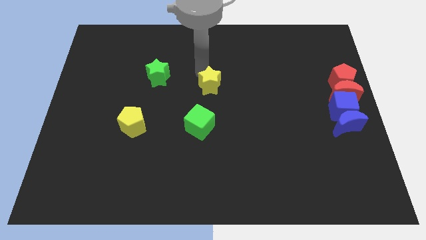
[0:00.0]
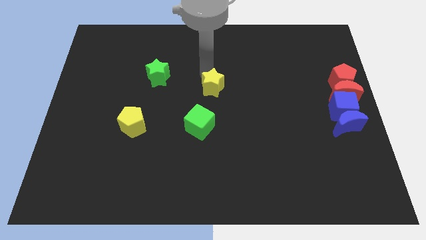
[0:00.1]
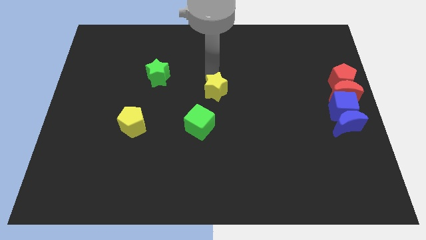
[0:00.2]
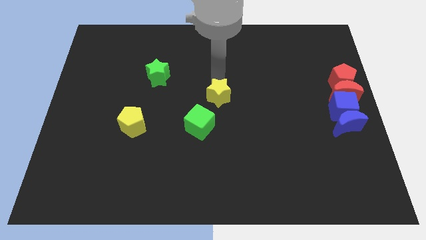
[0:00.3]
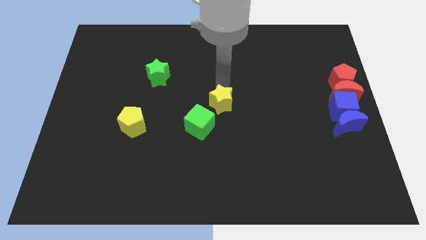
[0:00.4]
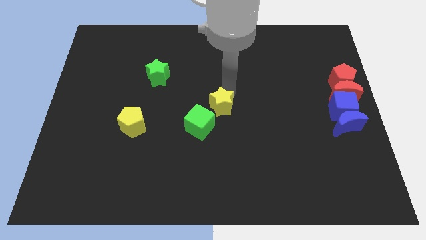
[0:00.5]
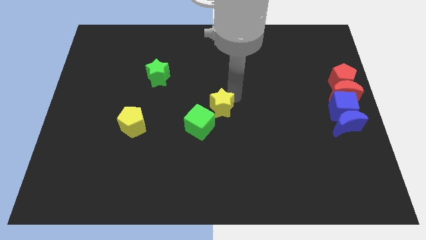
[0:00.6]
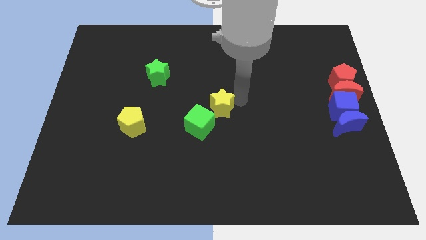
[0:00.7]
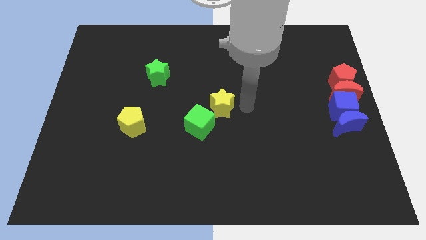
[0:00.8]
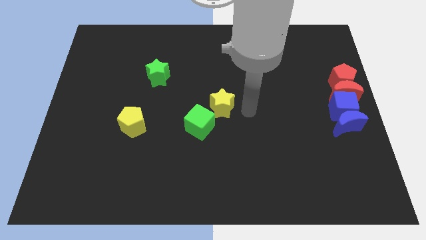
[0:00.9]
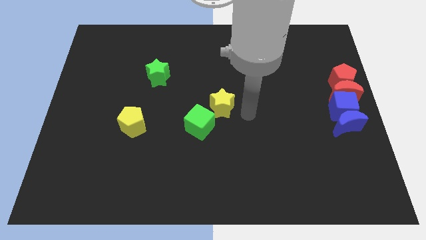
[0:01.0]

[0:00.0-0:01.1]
move the yellow star above the green cube

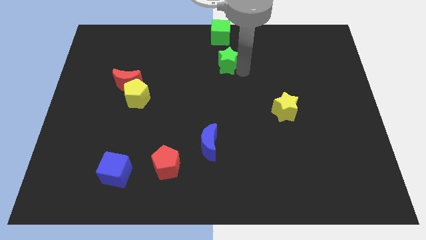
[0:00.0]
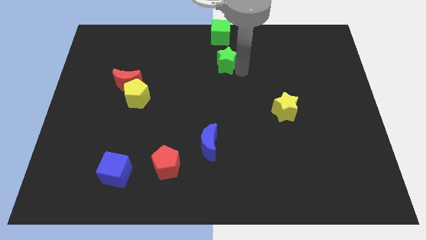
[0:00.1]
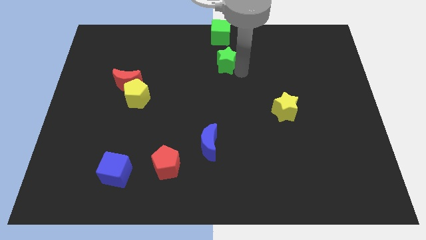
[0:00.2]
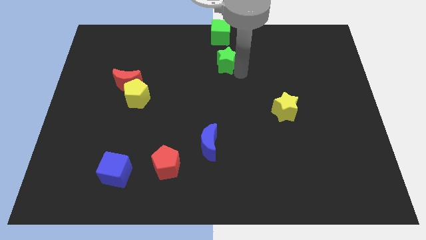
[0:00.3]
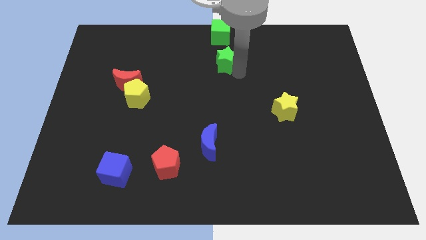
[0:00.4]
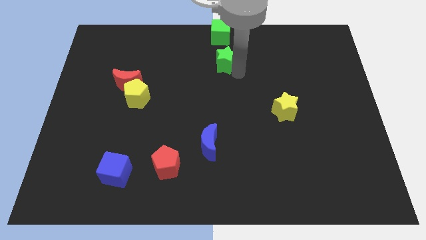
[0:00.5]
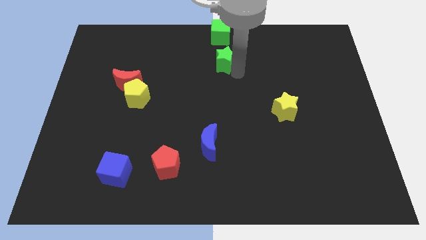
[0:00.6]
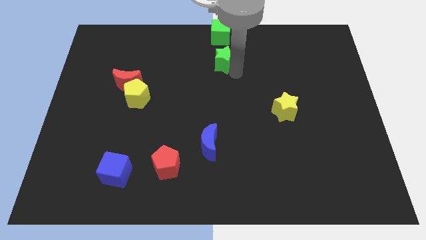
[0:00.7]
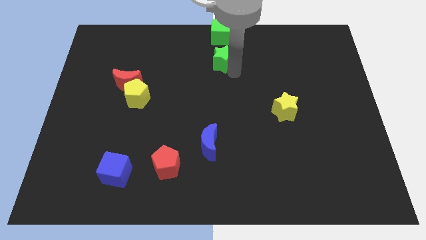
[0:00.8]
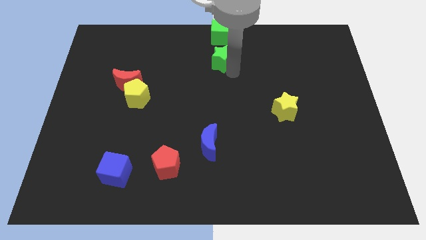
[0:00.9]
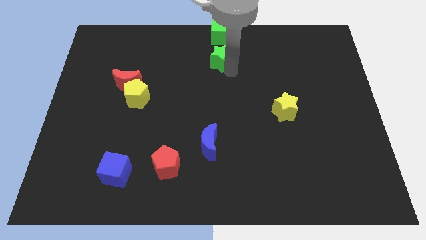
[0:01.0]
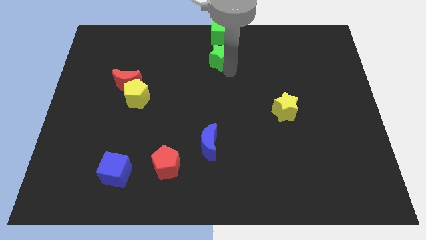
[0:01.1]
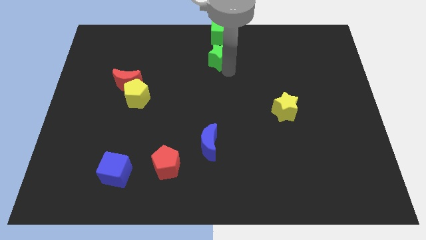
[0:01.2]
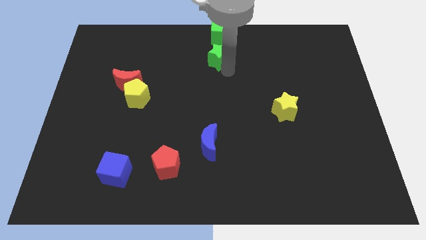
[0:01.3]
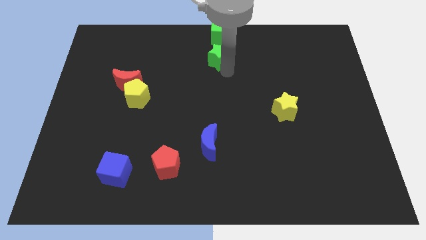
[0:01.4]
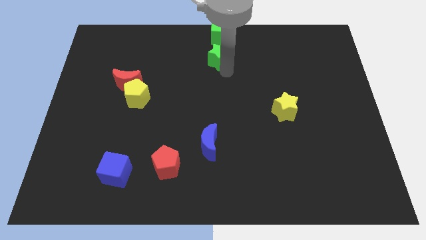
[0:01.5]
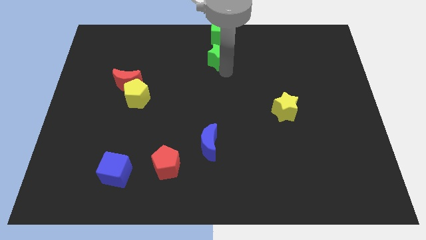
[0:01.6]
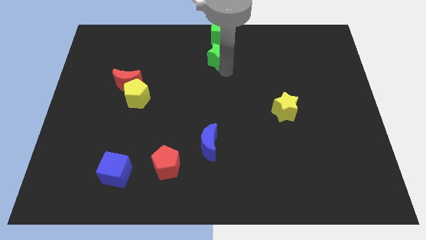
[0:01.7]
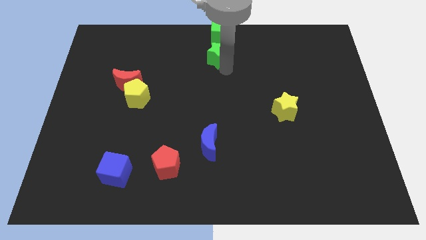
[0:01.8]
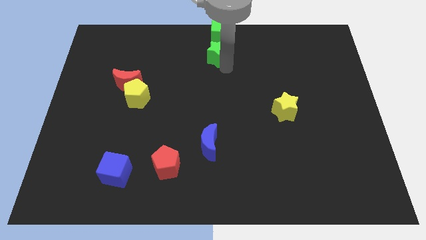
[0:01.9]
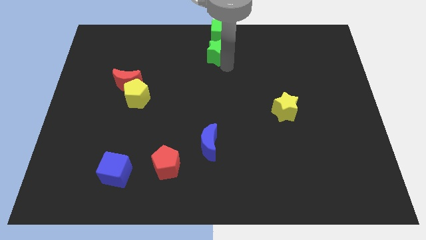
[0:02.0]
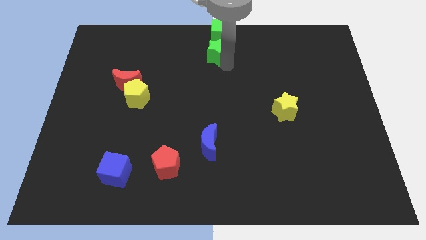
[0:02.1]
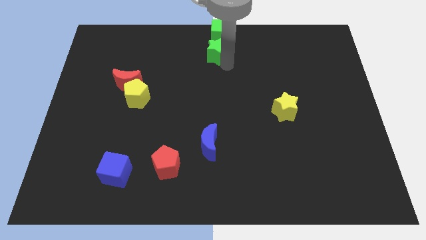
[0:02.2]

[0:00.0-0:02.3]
push the green star up slightly

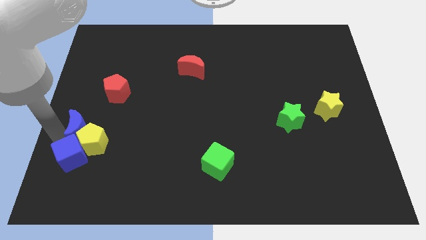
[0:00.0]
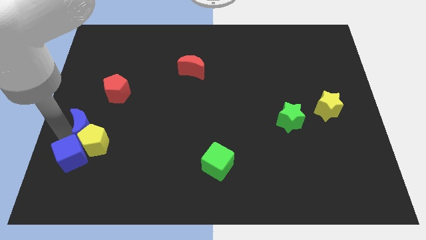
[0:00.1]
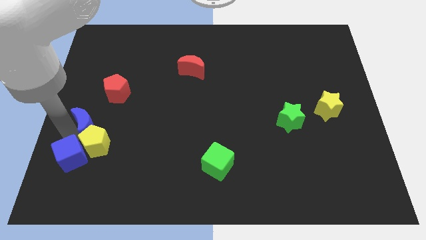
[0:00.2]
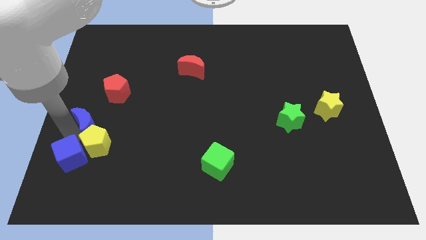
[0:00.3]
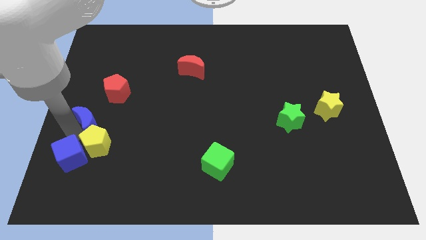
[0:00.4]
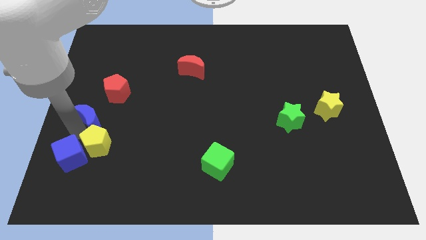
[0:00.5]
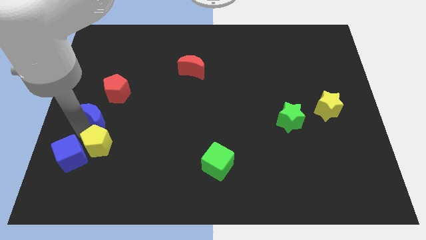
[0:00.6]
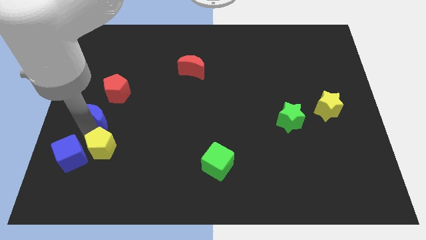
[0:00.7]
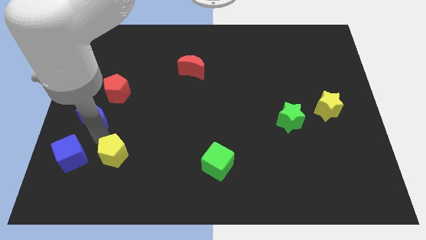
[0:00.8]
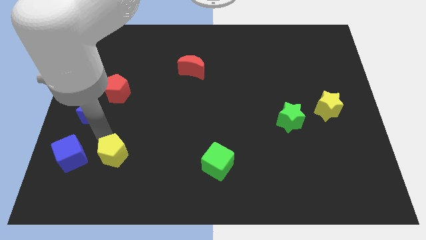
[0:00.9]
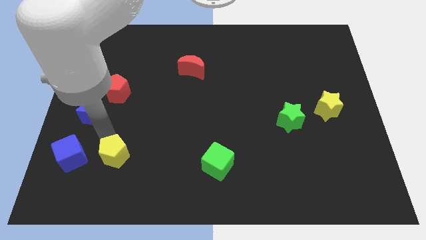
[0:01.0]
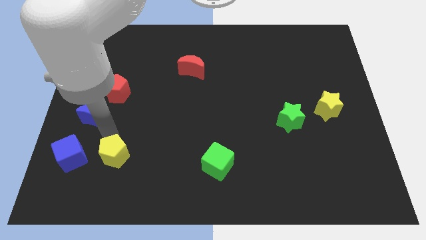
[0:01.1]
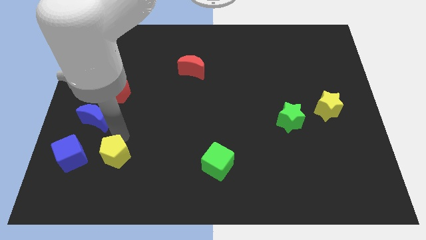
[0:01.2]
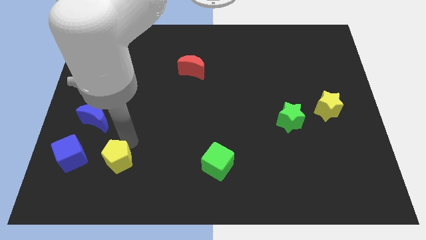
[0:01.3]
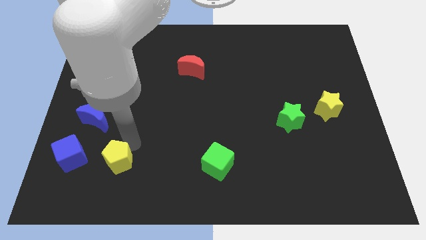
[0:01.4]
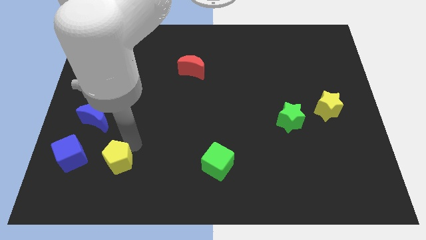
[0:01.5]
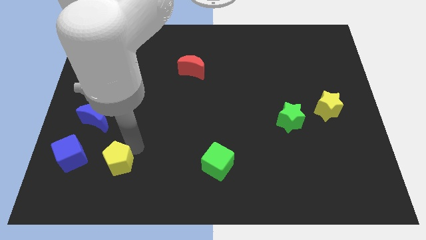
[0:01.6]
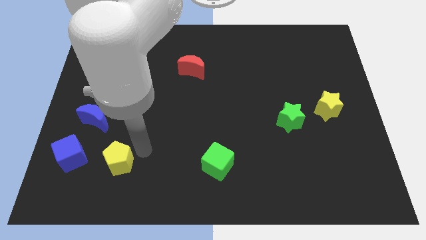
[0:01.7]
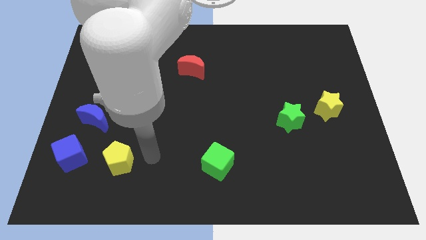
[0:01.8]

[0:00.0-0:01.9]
separate the yellow pentagon from the blue cube

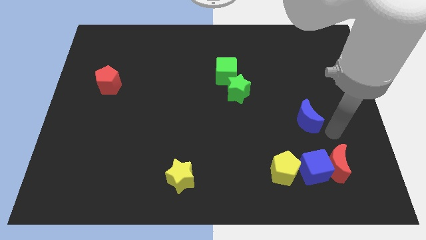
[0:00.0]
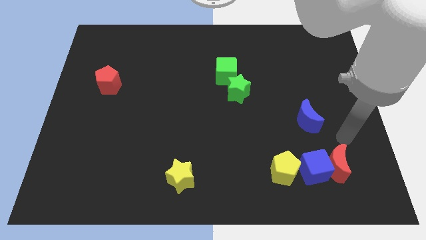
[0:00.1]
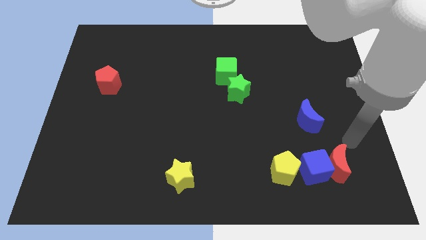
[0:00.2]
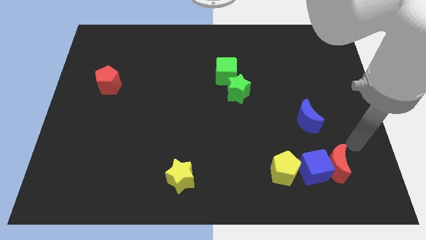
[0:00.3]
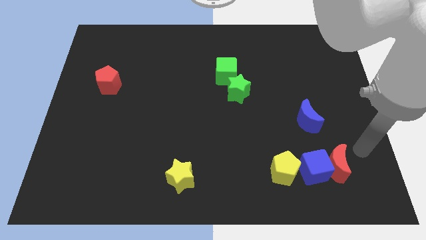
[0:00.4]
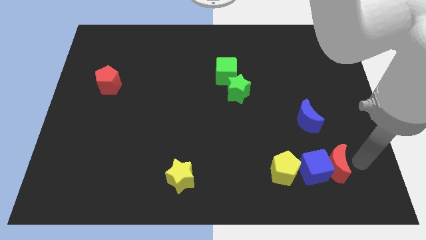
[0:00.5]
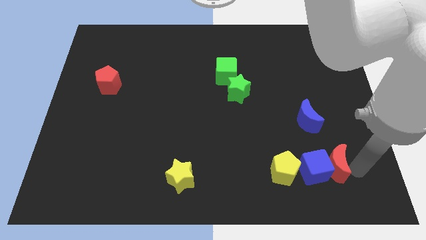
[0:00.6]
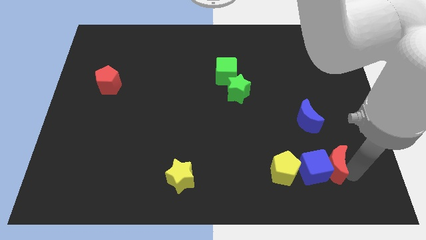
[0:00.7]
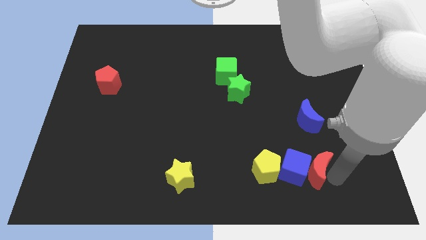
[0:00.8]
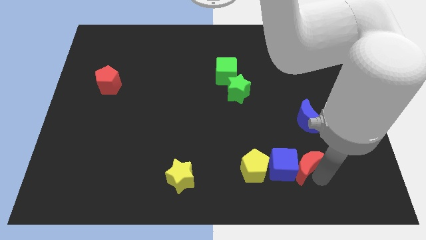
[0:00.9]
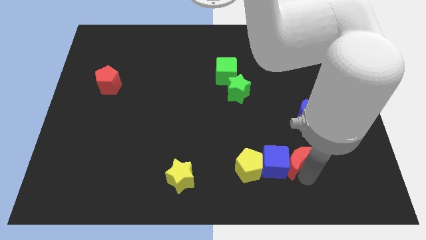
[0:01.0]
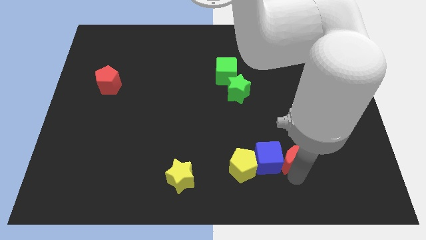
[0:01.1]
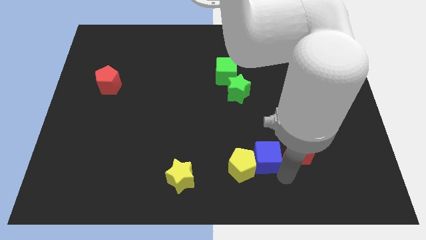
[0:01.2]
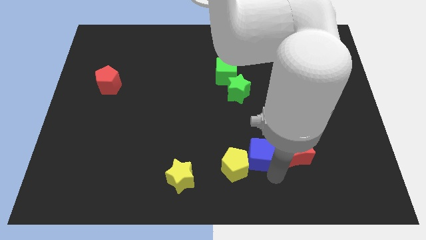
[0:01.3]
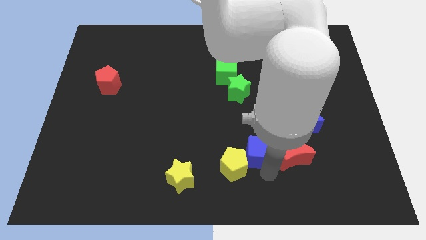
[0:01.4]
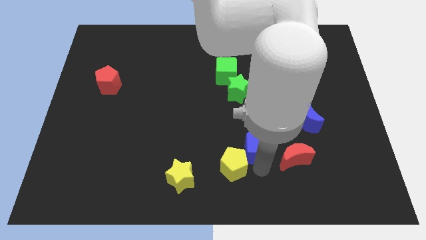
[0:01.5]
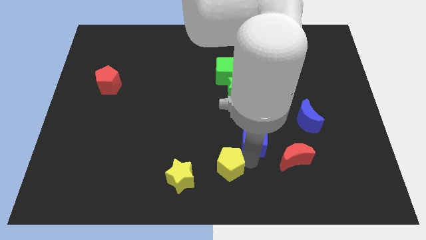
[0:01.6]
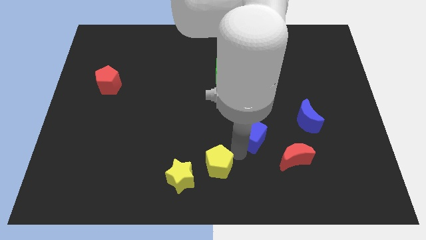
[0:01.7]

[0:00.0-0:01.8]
separate blue cube from red moon and yellow pentagon

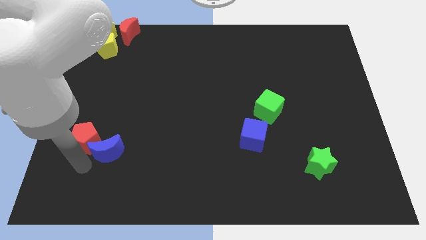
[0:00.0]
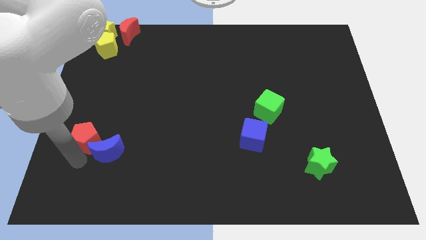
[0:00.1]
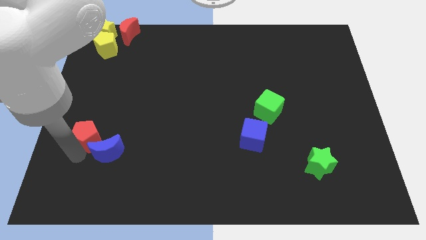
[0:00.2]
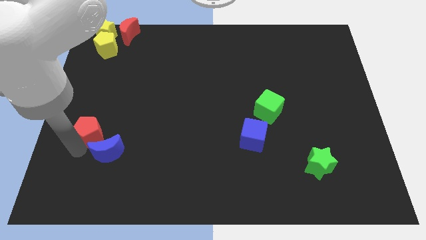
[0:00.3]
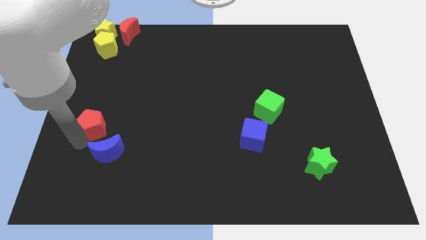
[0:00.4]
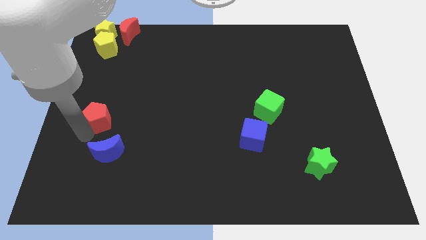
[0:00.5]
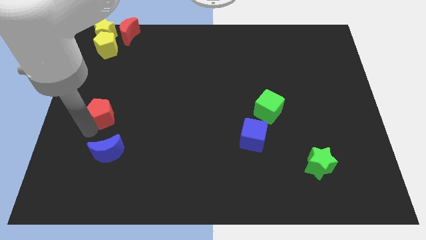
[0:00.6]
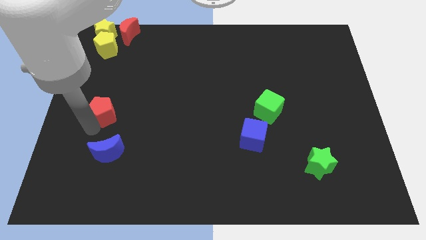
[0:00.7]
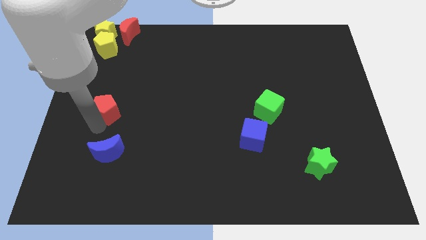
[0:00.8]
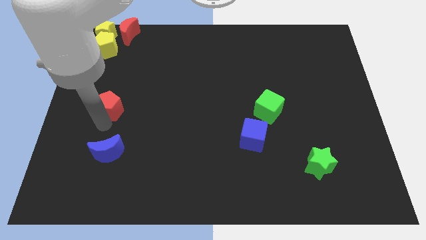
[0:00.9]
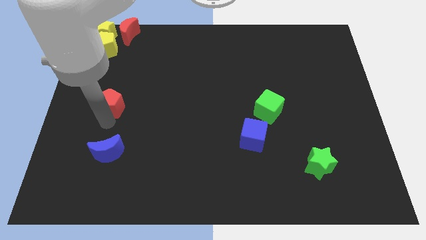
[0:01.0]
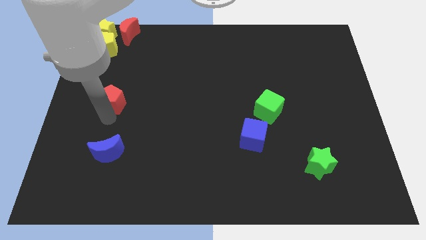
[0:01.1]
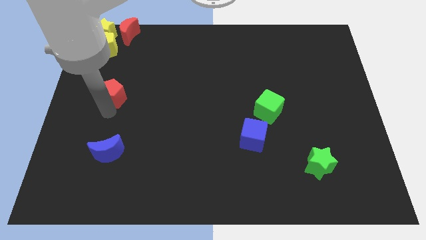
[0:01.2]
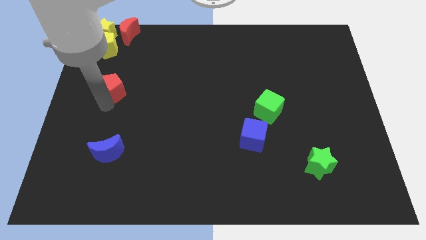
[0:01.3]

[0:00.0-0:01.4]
move the red pentagon up slightly

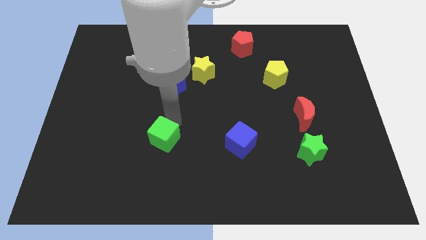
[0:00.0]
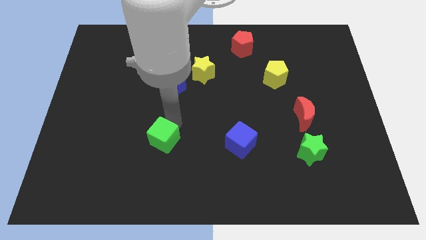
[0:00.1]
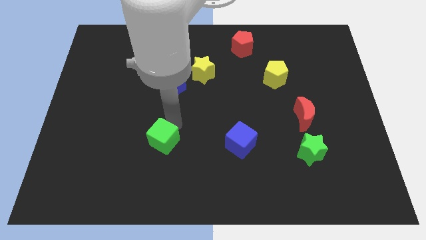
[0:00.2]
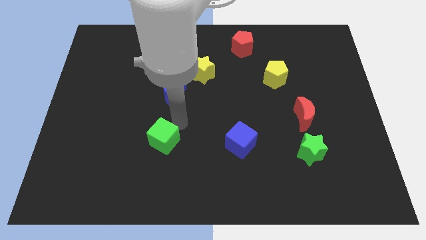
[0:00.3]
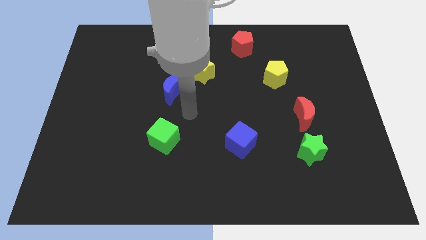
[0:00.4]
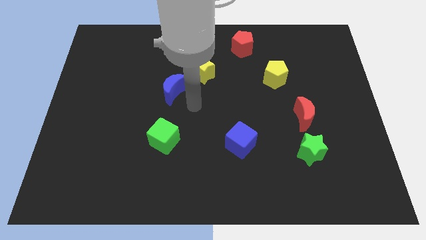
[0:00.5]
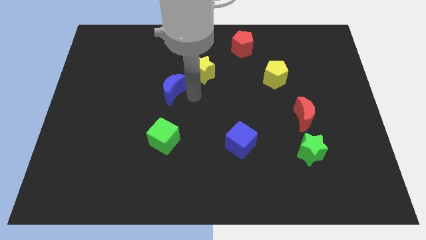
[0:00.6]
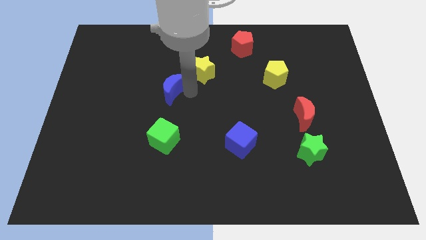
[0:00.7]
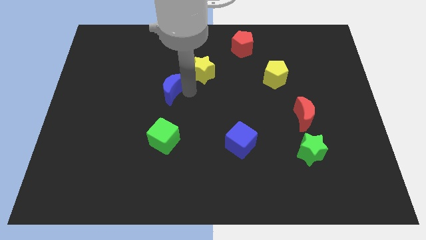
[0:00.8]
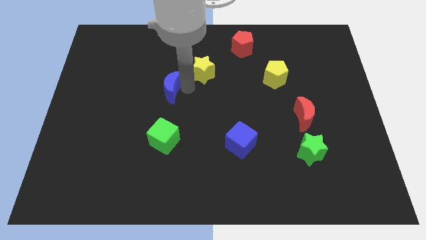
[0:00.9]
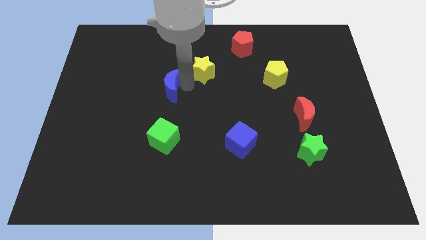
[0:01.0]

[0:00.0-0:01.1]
move your arm away from green cube
